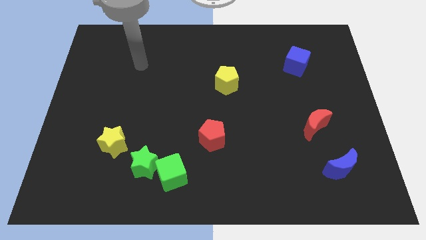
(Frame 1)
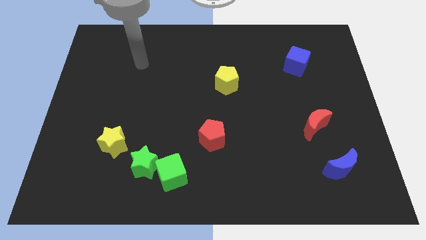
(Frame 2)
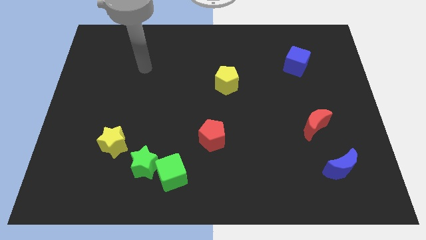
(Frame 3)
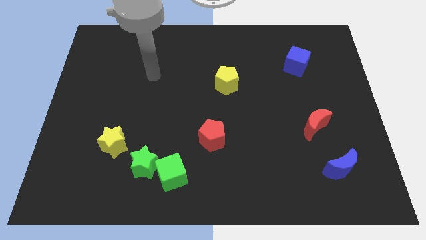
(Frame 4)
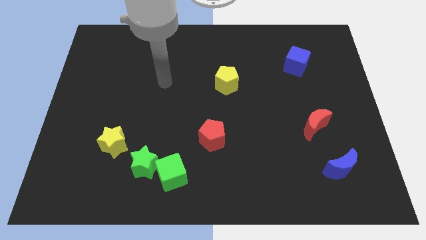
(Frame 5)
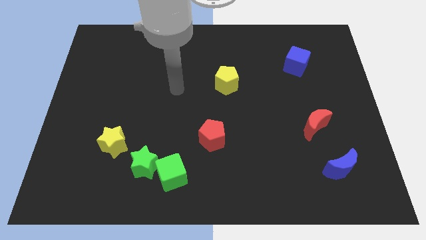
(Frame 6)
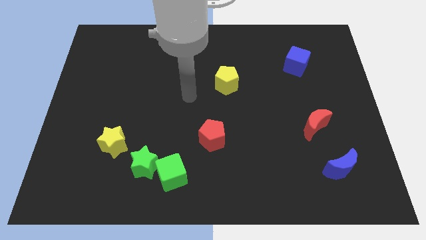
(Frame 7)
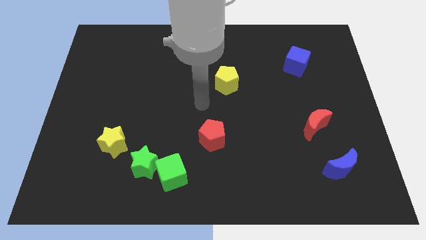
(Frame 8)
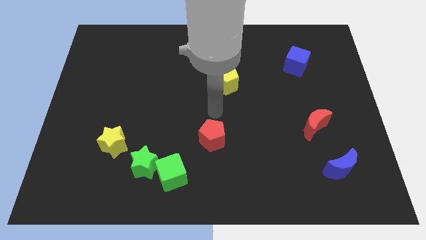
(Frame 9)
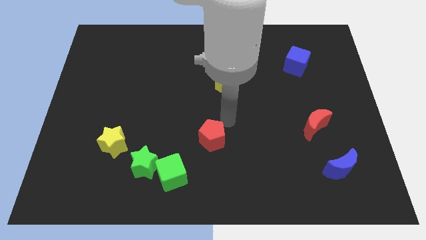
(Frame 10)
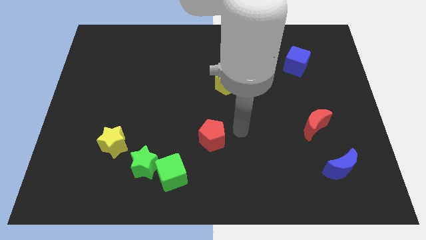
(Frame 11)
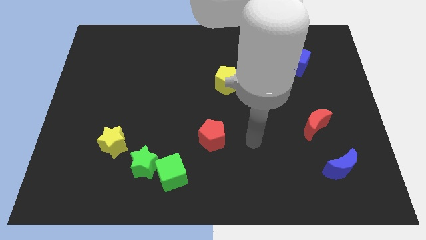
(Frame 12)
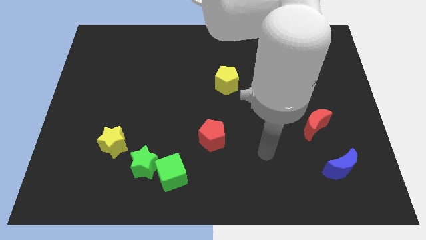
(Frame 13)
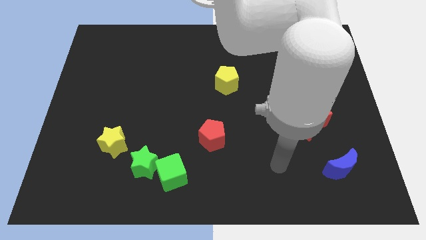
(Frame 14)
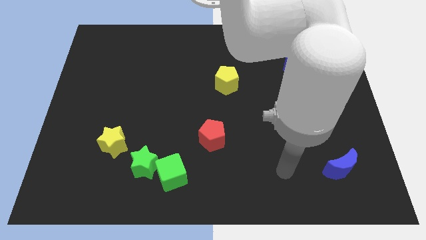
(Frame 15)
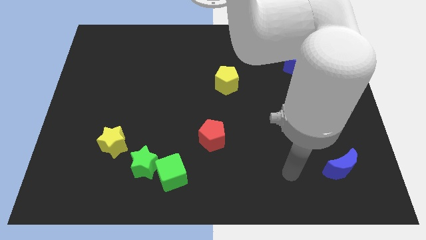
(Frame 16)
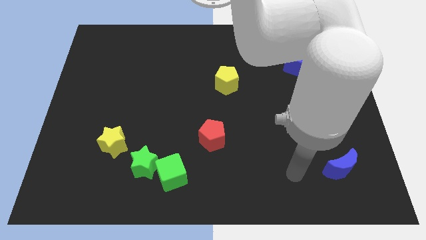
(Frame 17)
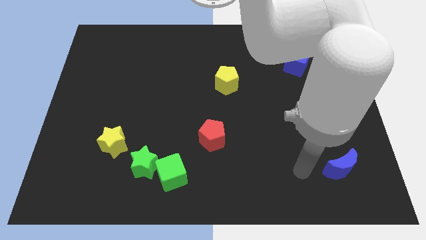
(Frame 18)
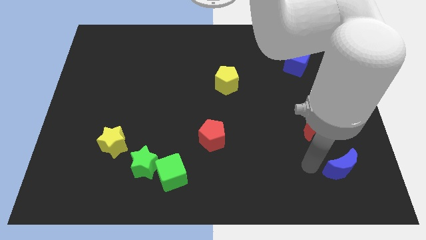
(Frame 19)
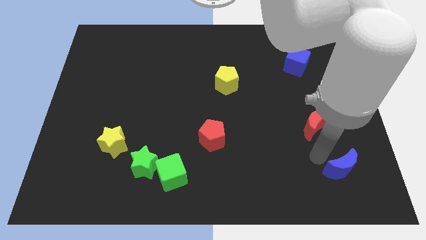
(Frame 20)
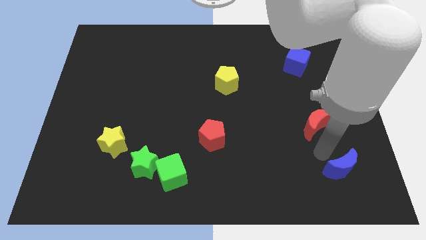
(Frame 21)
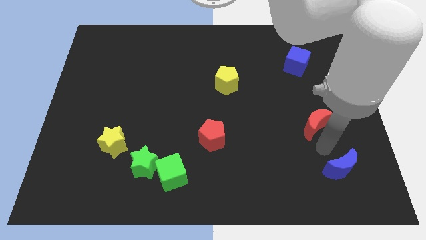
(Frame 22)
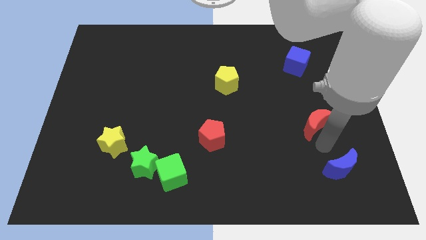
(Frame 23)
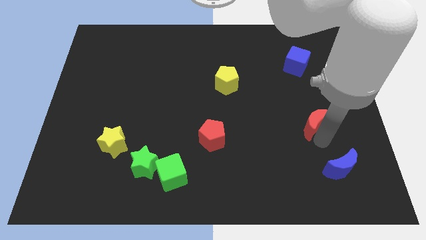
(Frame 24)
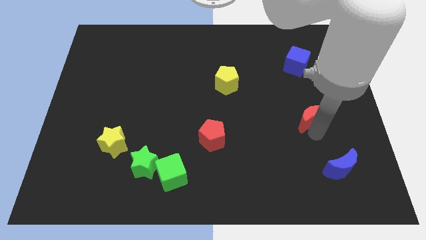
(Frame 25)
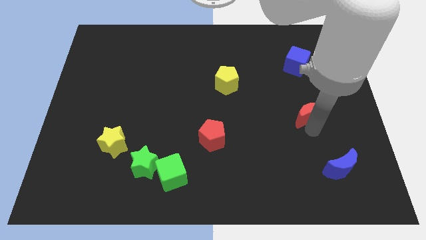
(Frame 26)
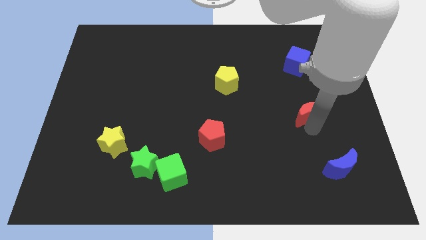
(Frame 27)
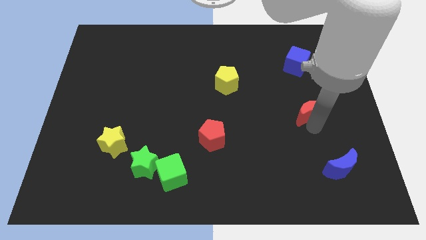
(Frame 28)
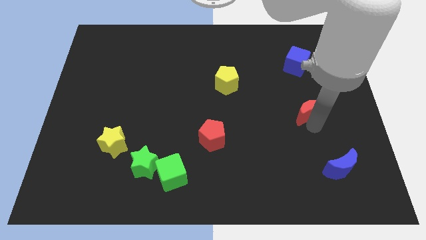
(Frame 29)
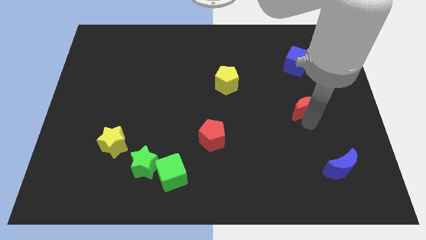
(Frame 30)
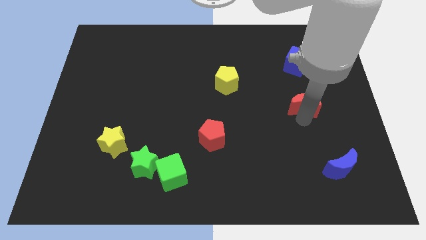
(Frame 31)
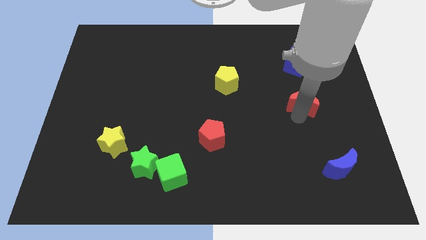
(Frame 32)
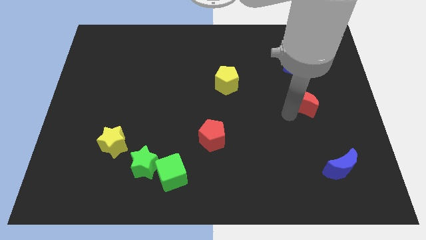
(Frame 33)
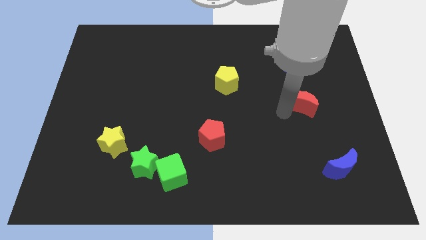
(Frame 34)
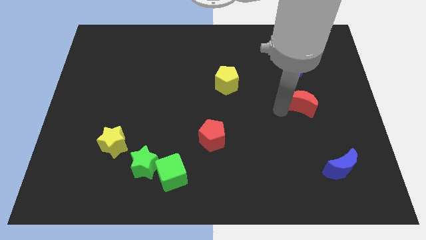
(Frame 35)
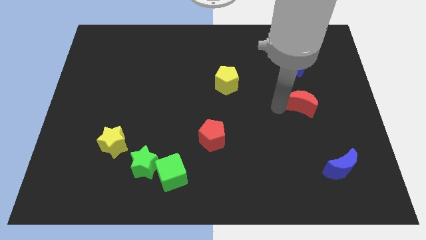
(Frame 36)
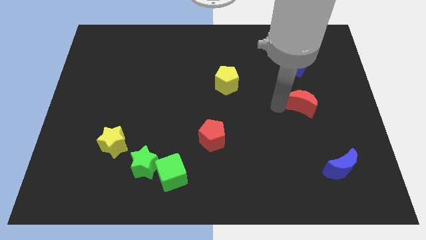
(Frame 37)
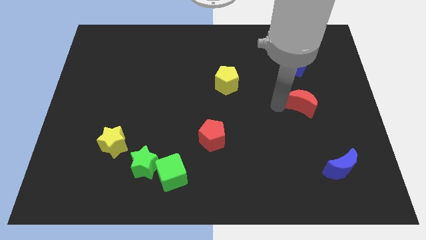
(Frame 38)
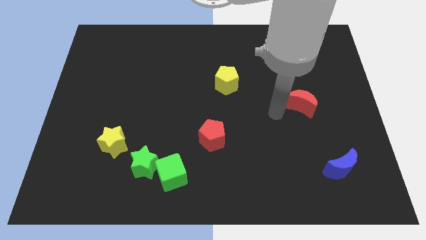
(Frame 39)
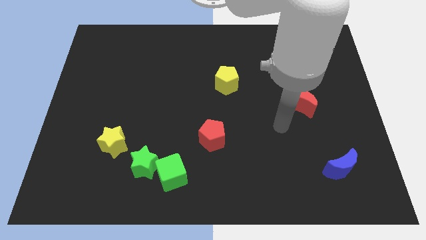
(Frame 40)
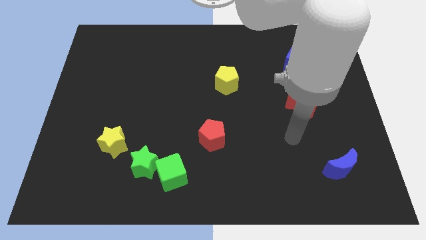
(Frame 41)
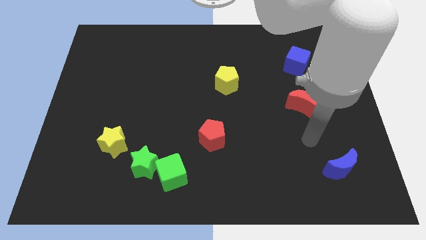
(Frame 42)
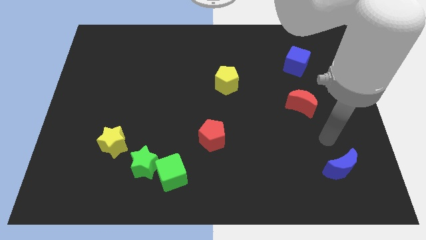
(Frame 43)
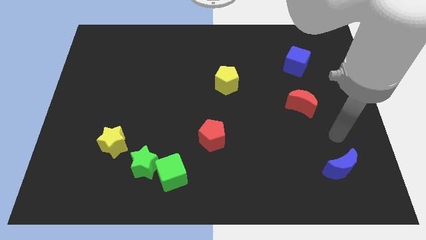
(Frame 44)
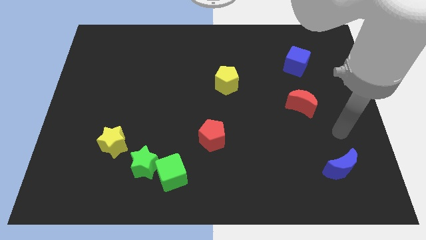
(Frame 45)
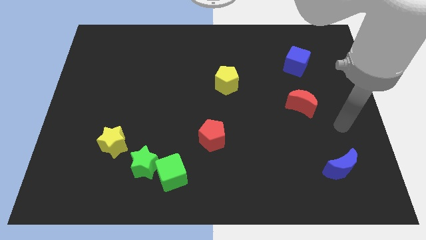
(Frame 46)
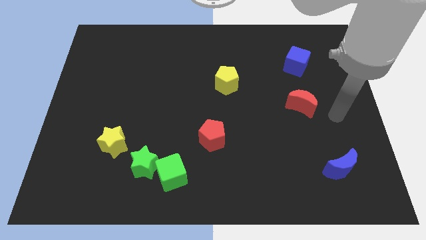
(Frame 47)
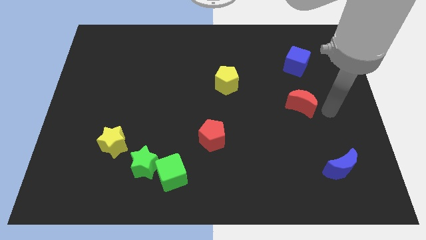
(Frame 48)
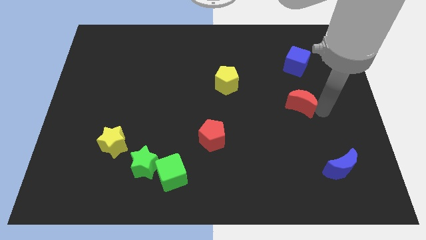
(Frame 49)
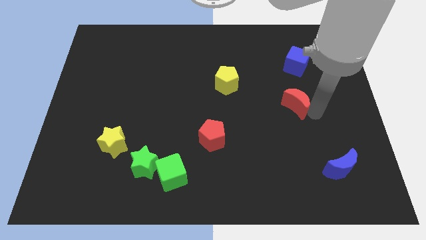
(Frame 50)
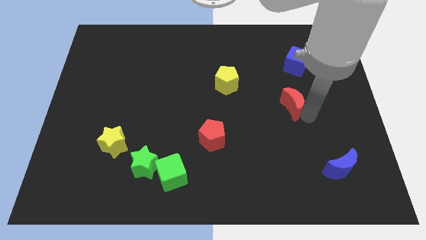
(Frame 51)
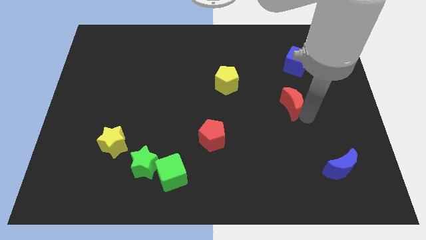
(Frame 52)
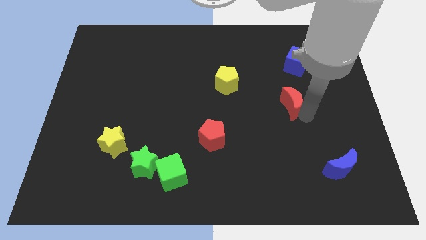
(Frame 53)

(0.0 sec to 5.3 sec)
move red crescent towards yellow pentagon

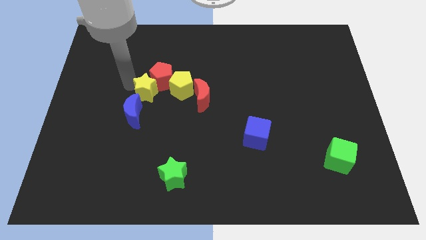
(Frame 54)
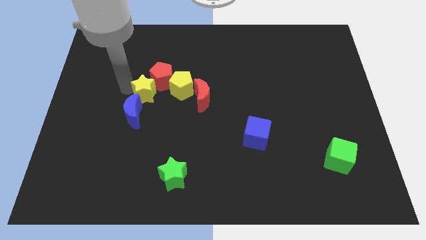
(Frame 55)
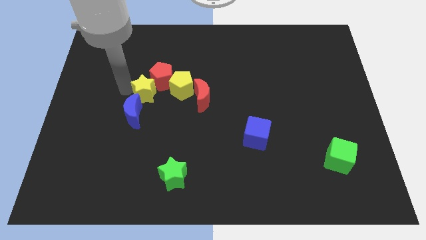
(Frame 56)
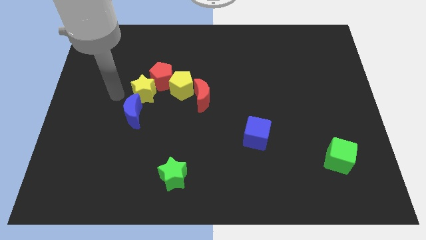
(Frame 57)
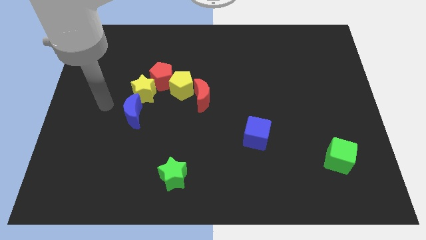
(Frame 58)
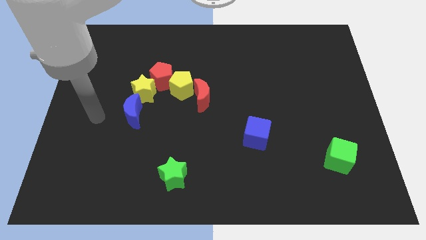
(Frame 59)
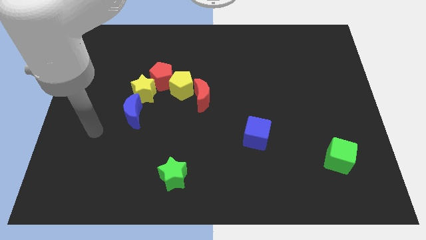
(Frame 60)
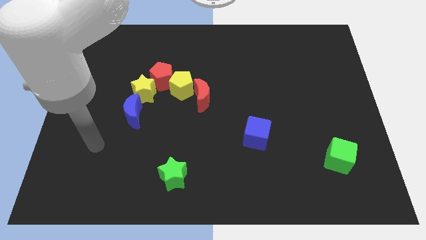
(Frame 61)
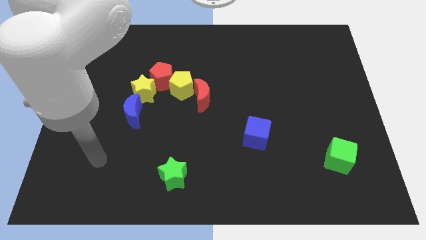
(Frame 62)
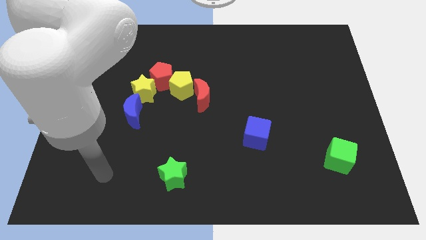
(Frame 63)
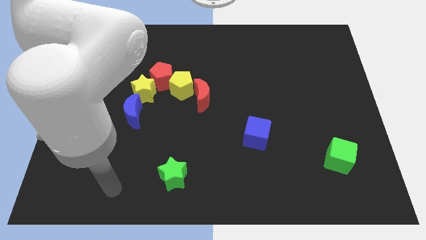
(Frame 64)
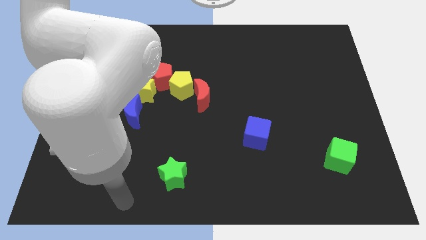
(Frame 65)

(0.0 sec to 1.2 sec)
slide your arm away from yellow star

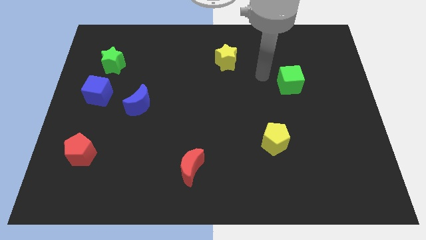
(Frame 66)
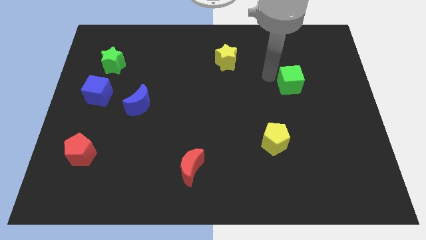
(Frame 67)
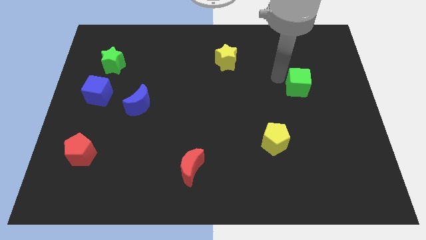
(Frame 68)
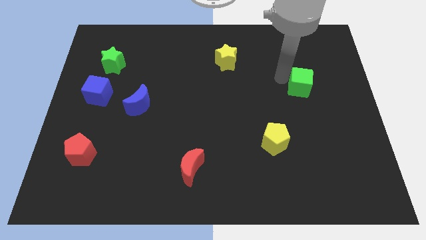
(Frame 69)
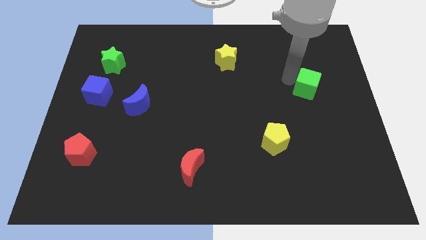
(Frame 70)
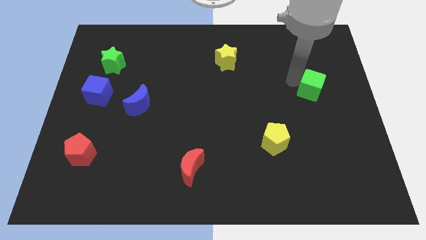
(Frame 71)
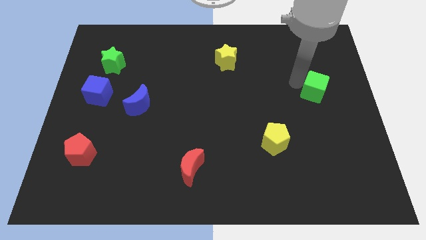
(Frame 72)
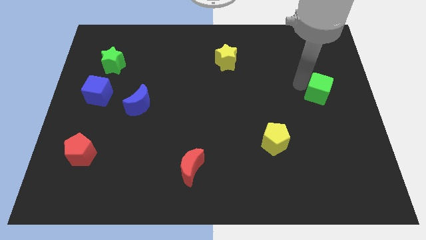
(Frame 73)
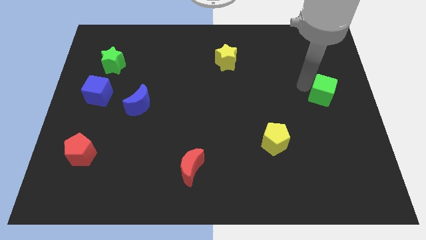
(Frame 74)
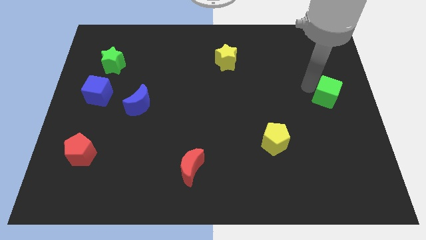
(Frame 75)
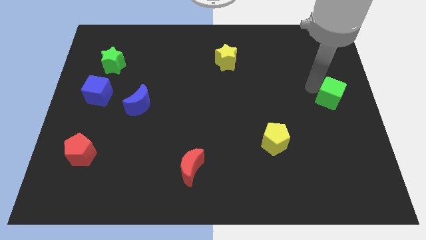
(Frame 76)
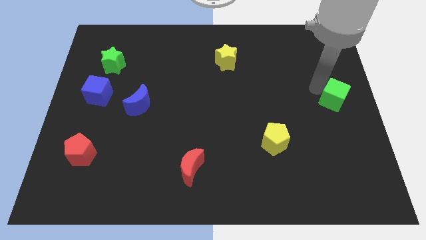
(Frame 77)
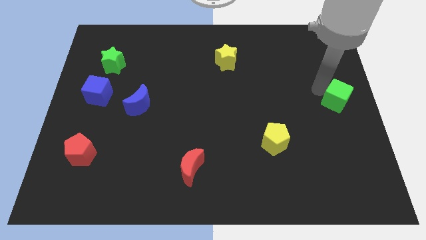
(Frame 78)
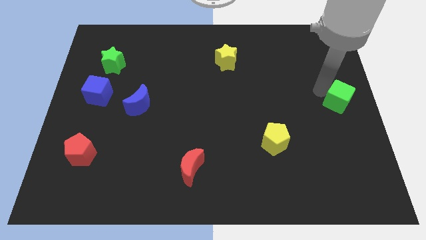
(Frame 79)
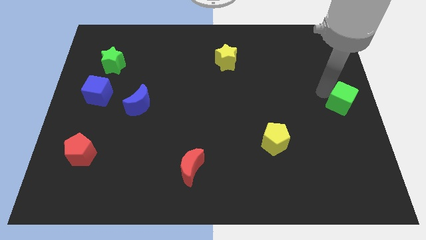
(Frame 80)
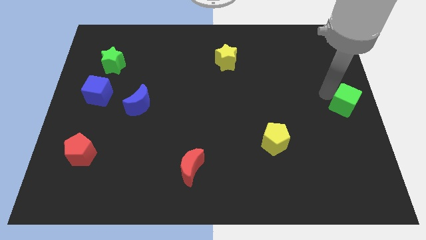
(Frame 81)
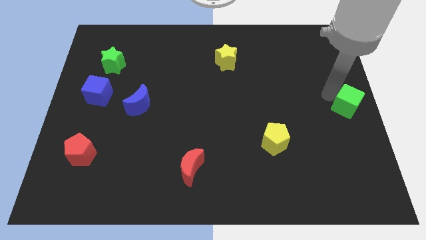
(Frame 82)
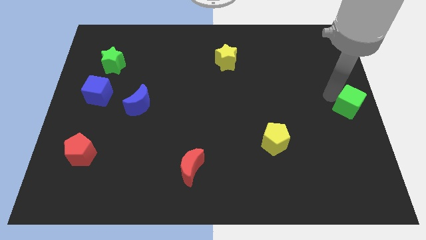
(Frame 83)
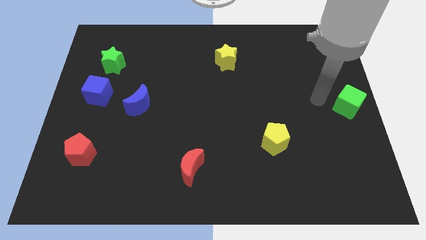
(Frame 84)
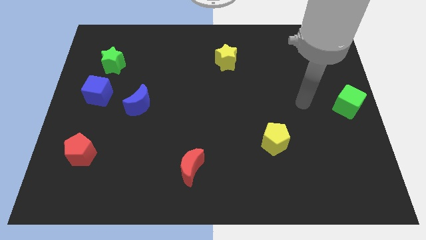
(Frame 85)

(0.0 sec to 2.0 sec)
move the green cube to the right center of the board

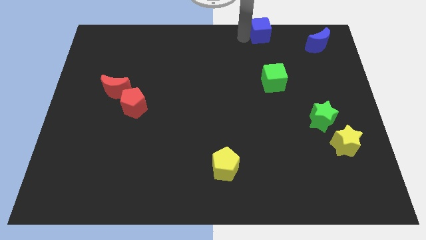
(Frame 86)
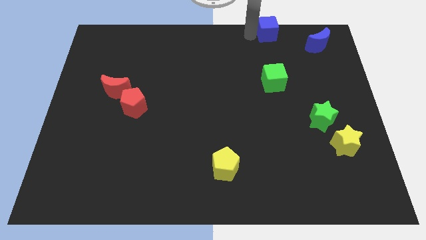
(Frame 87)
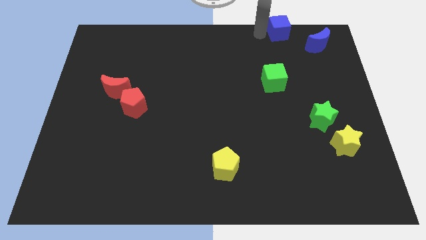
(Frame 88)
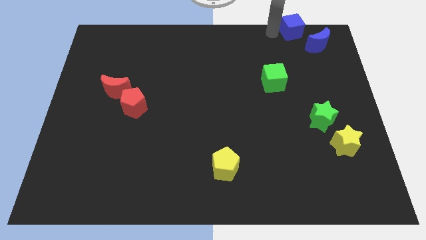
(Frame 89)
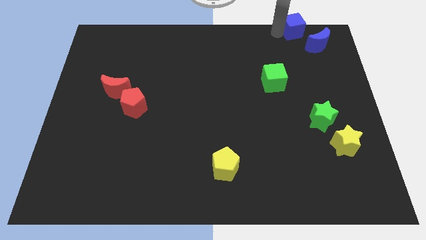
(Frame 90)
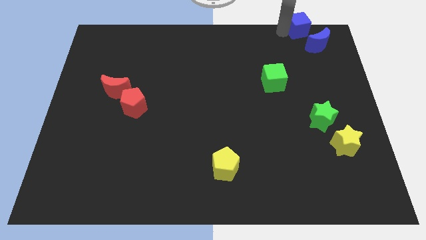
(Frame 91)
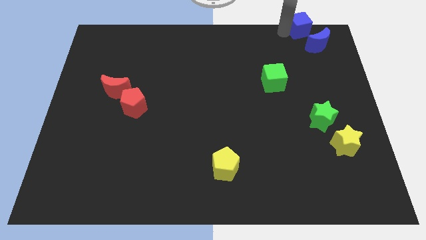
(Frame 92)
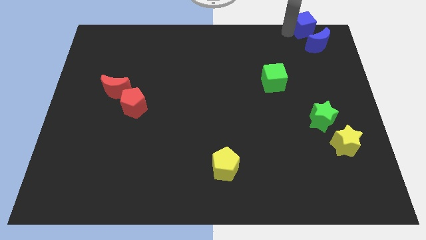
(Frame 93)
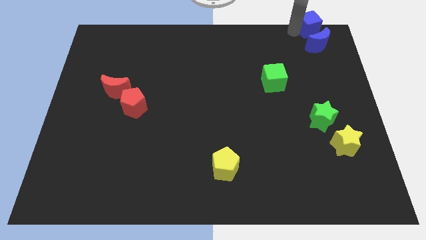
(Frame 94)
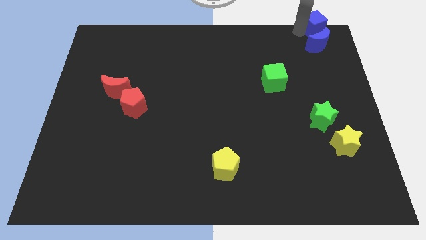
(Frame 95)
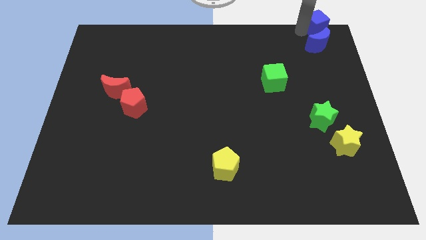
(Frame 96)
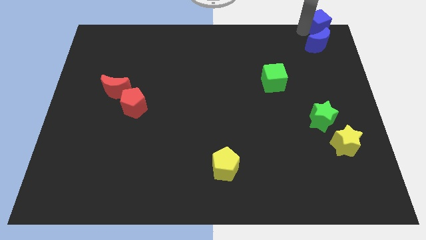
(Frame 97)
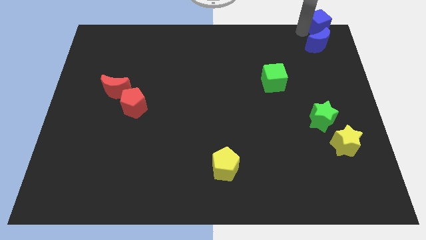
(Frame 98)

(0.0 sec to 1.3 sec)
place the blue cube above the blue crescent
